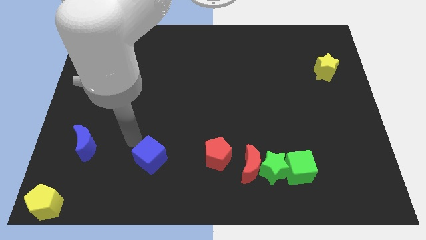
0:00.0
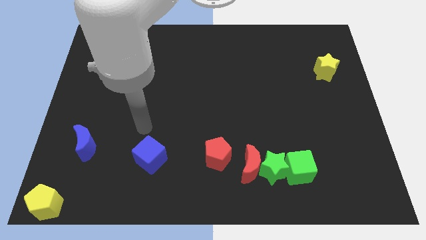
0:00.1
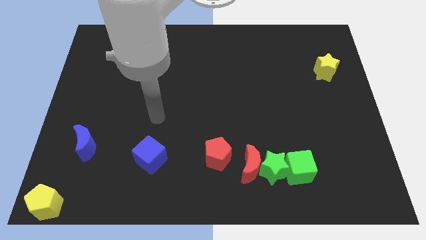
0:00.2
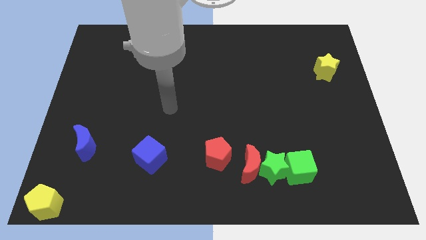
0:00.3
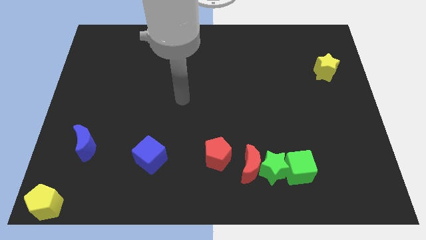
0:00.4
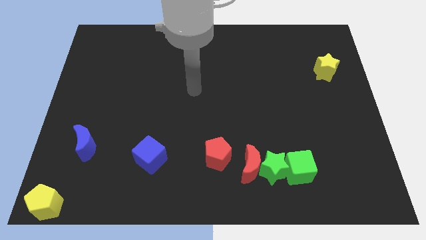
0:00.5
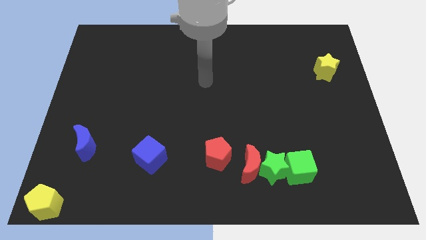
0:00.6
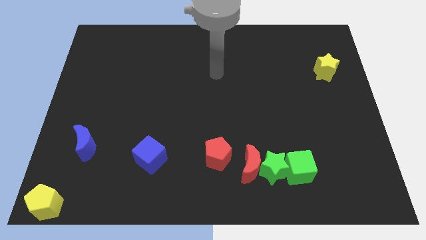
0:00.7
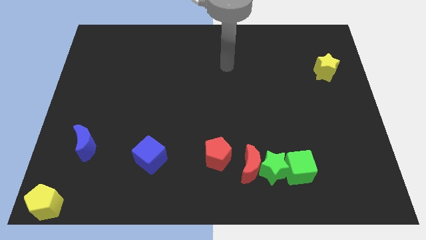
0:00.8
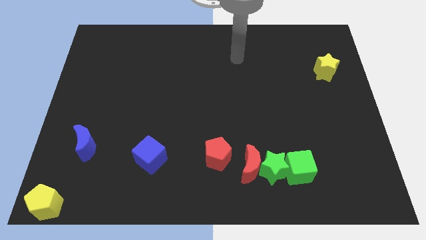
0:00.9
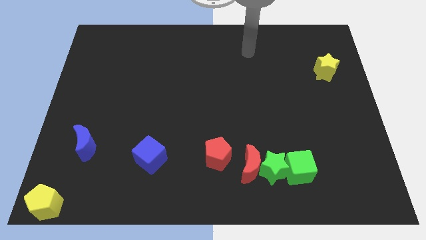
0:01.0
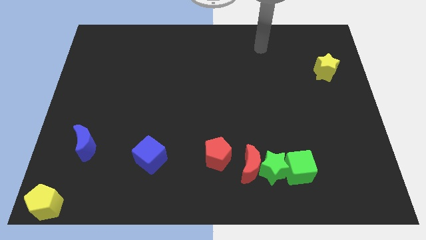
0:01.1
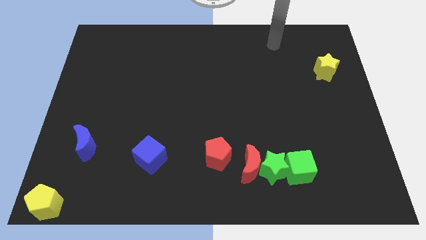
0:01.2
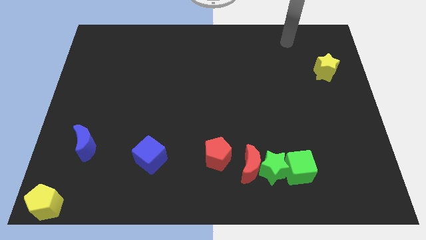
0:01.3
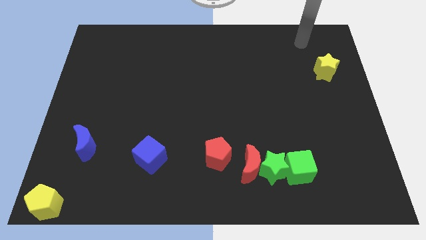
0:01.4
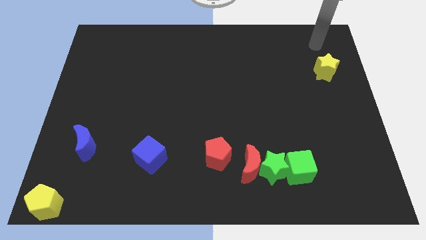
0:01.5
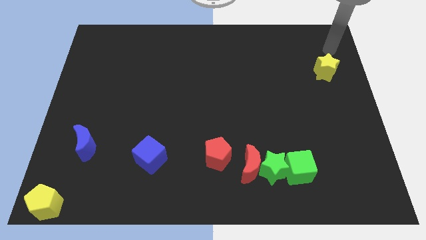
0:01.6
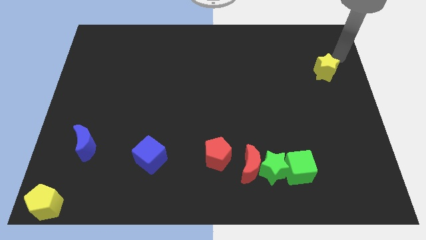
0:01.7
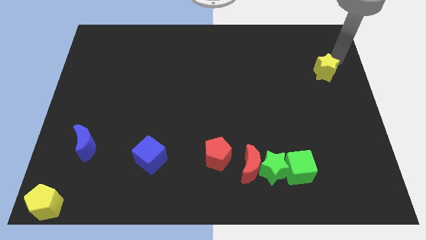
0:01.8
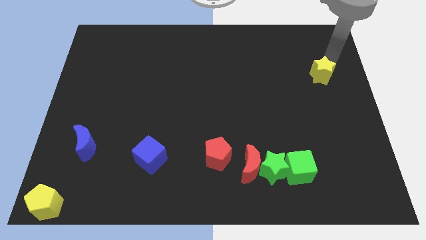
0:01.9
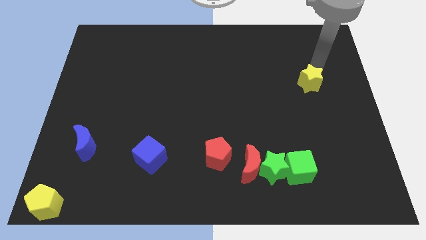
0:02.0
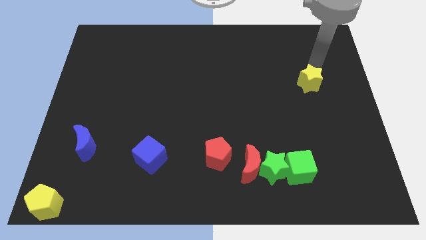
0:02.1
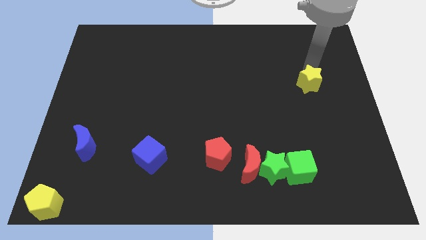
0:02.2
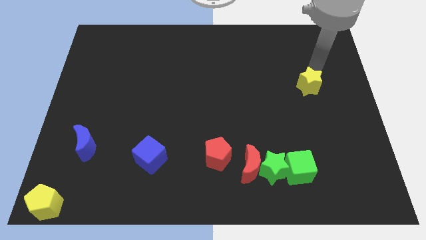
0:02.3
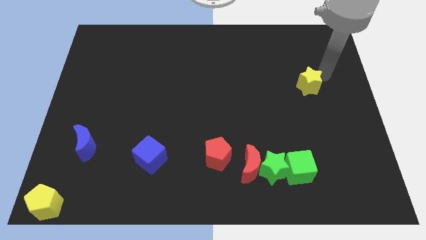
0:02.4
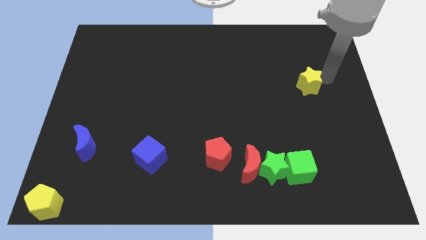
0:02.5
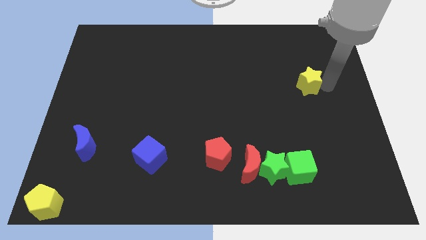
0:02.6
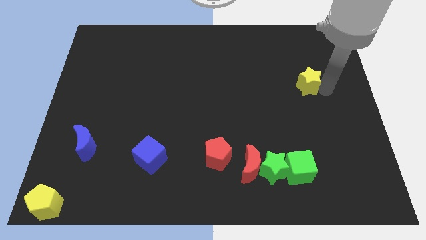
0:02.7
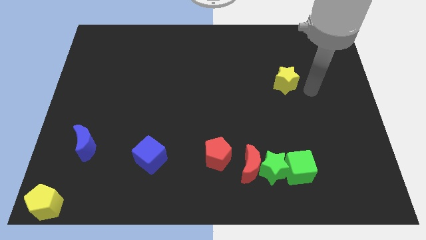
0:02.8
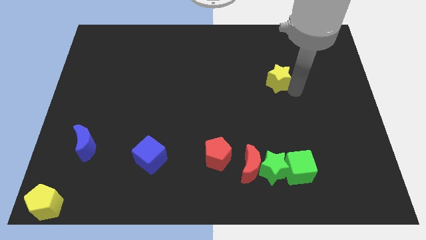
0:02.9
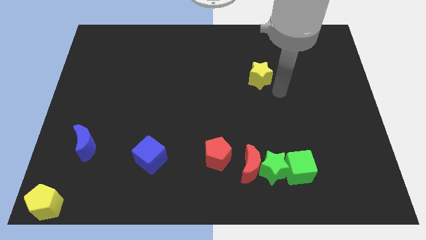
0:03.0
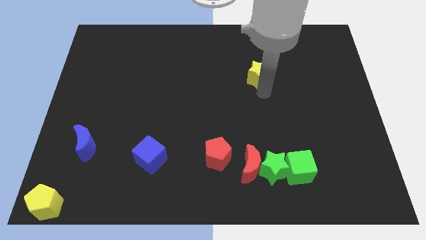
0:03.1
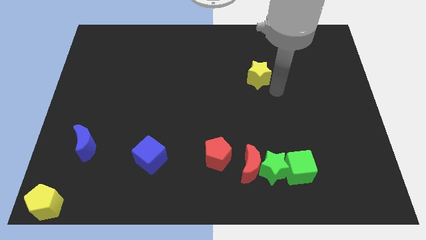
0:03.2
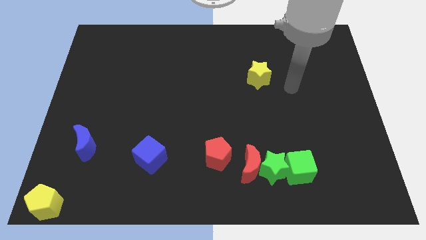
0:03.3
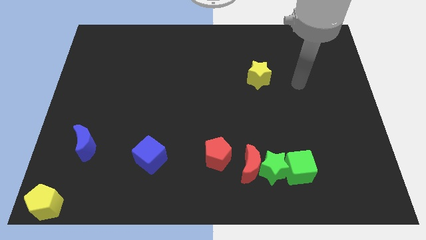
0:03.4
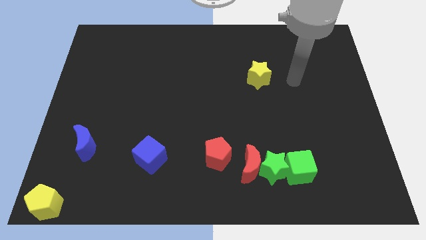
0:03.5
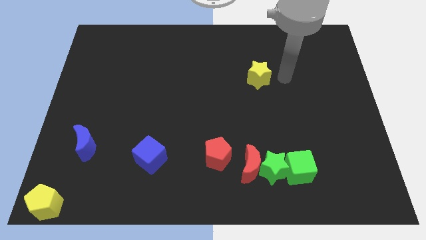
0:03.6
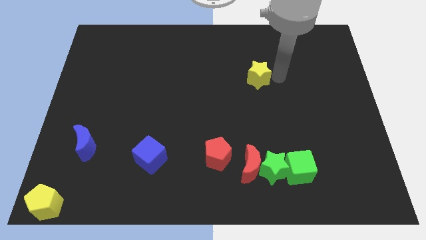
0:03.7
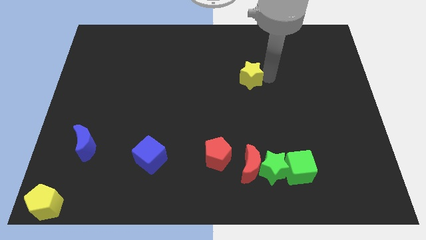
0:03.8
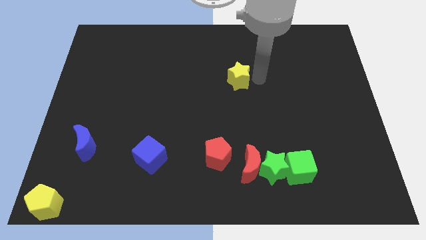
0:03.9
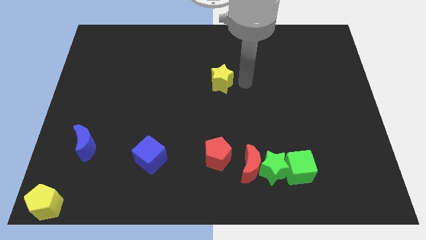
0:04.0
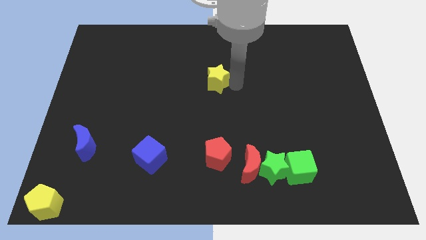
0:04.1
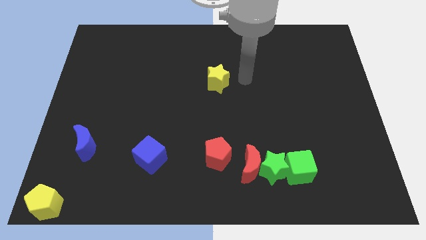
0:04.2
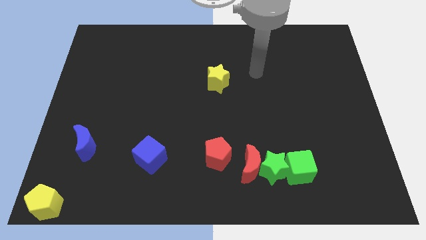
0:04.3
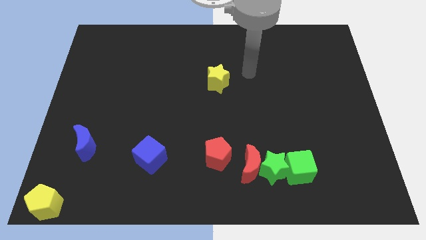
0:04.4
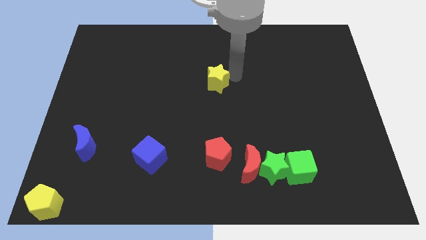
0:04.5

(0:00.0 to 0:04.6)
place the yellow star above the red pentagon

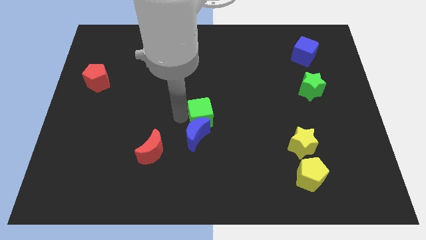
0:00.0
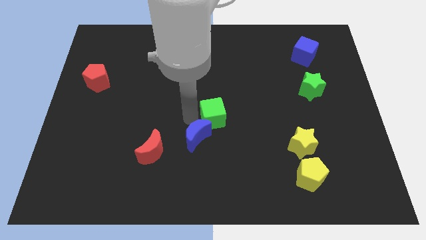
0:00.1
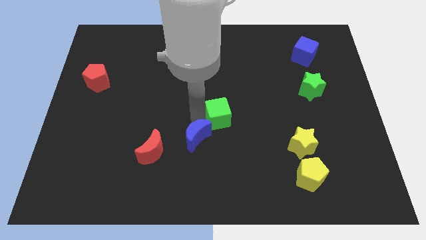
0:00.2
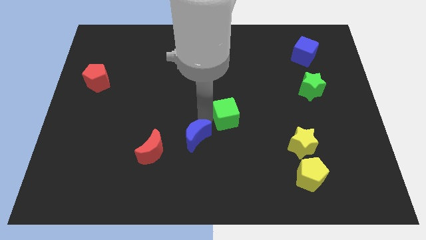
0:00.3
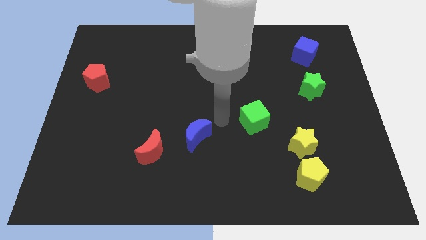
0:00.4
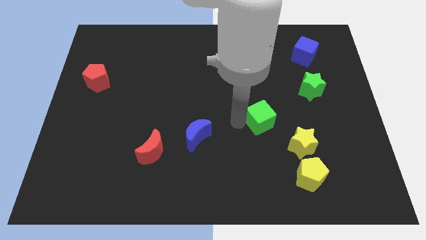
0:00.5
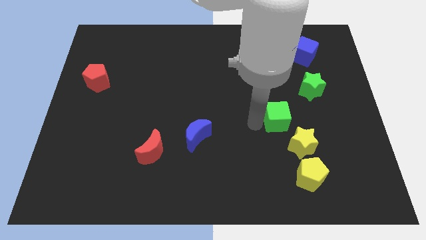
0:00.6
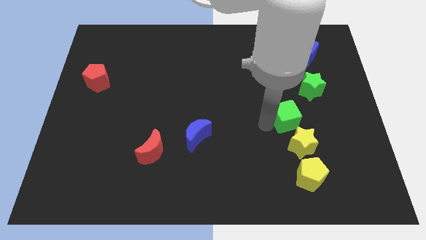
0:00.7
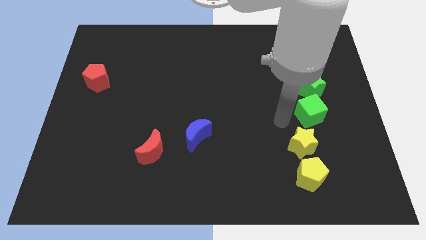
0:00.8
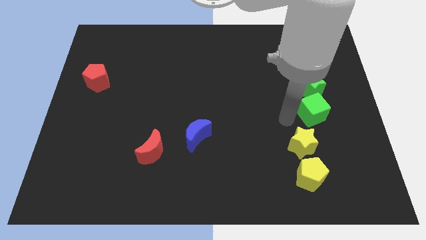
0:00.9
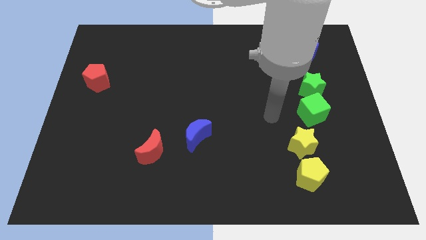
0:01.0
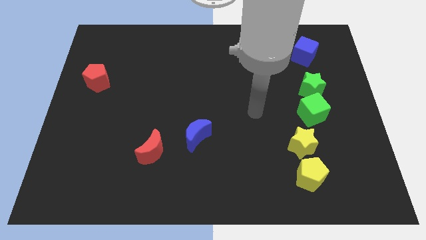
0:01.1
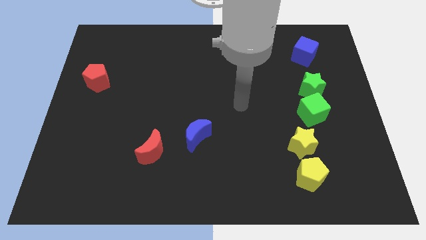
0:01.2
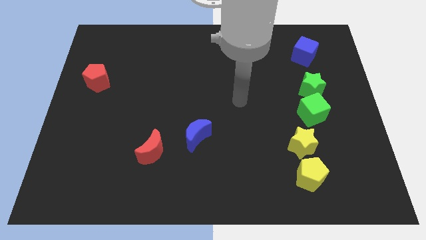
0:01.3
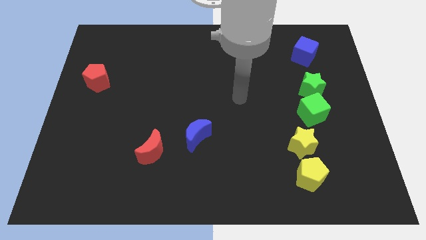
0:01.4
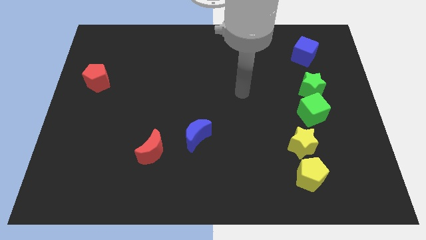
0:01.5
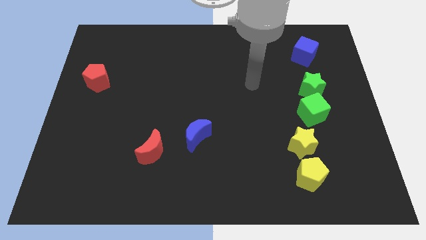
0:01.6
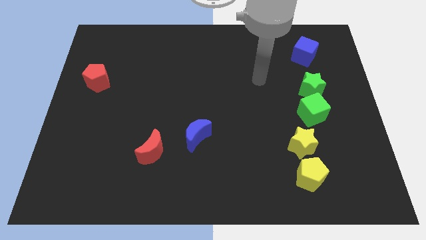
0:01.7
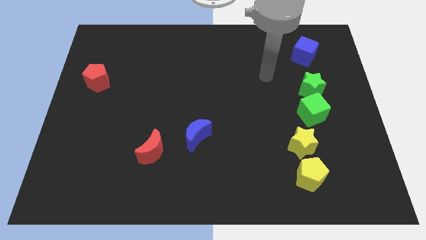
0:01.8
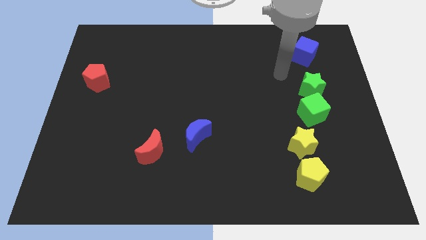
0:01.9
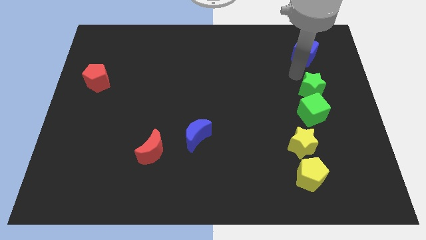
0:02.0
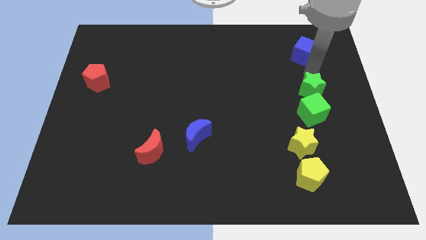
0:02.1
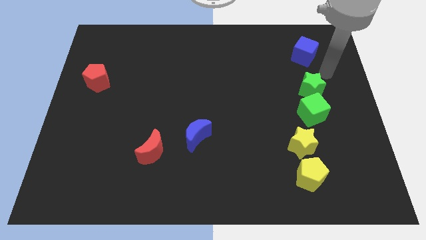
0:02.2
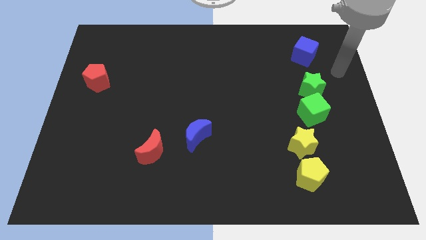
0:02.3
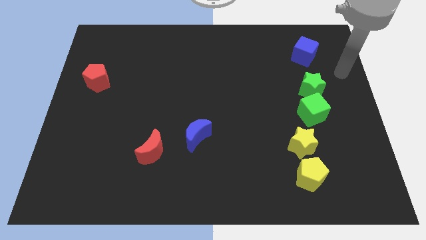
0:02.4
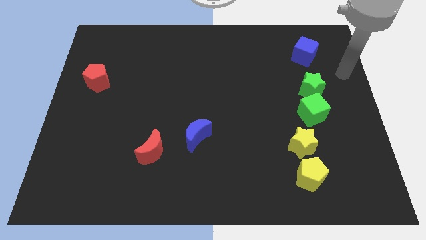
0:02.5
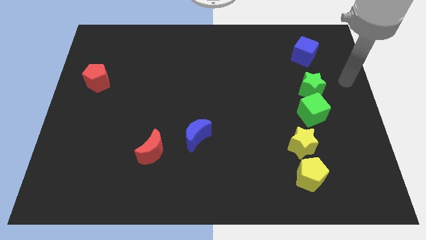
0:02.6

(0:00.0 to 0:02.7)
place the green cube above the yellow star

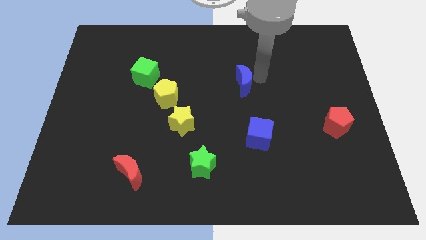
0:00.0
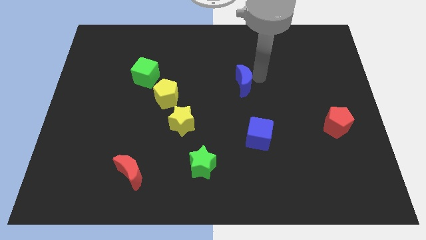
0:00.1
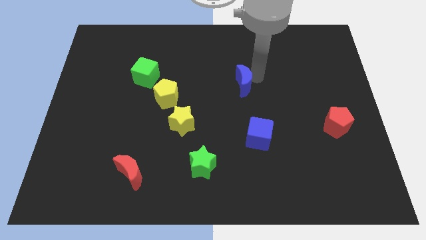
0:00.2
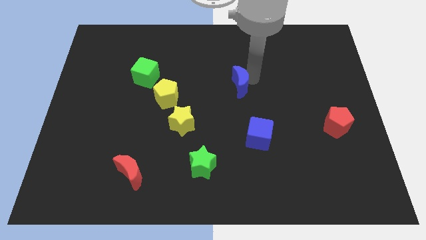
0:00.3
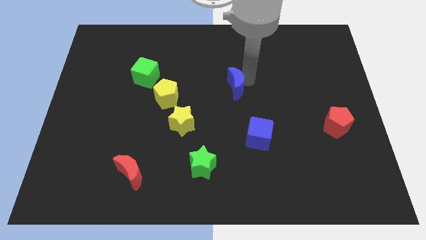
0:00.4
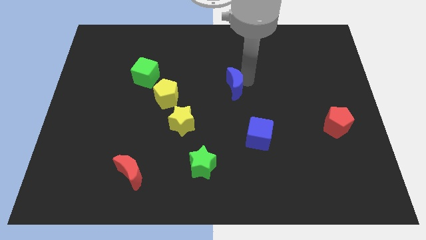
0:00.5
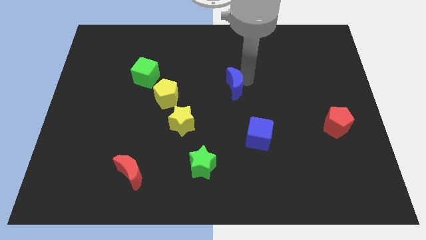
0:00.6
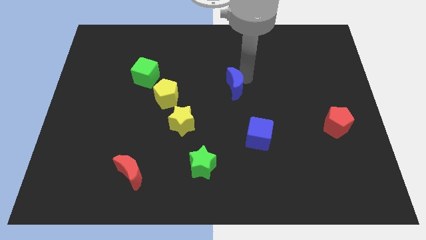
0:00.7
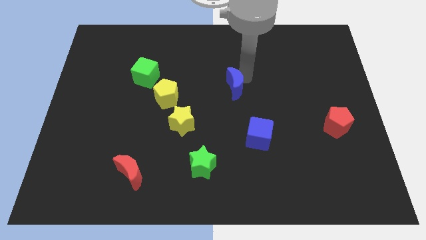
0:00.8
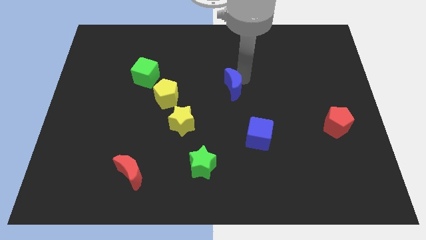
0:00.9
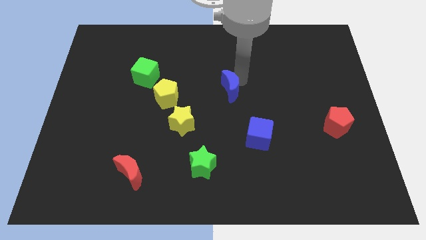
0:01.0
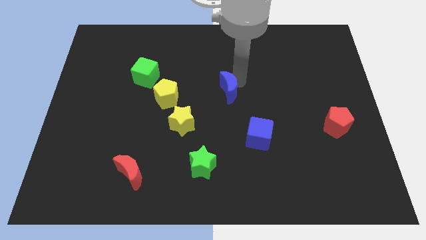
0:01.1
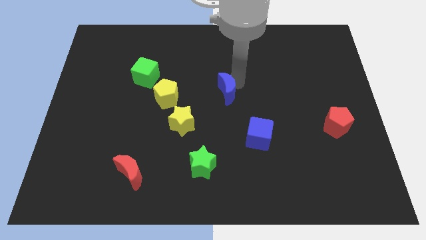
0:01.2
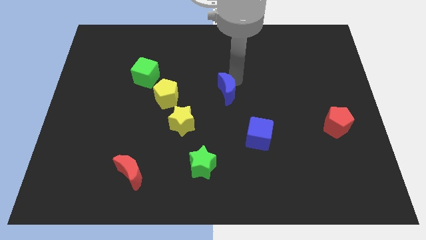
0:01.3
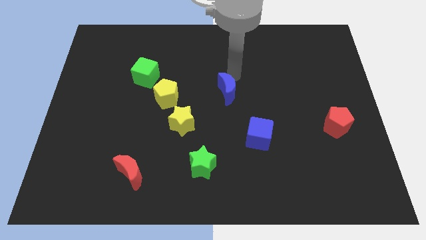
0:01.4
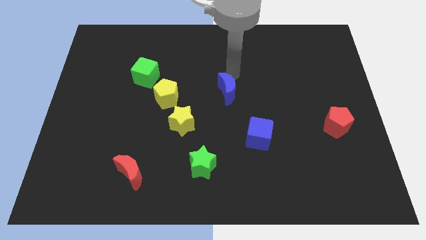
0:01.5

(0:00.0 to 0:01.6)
move the blue moon towards the center of the board

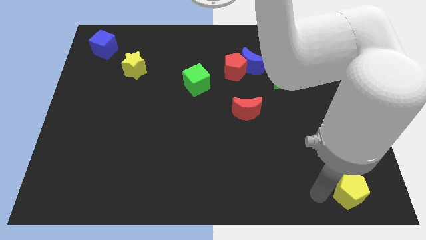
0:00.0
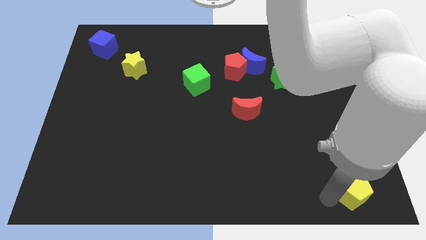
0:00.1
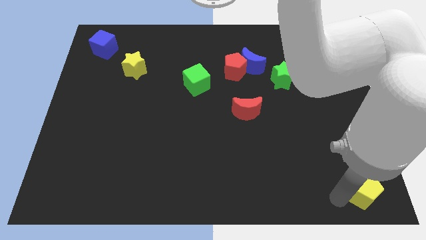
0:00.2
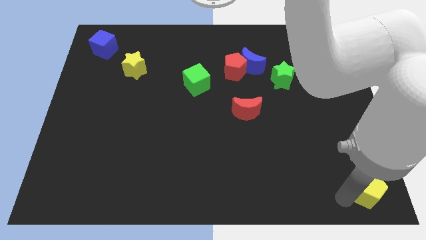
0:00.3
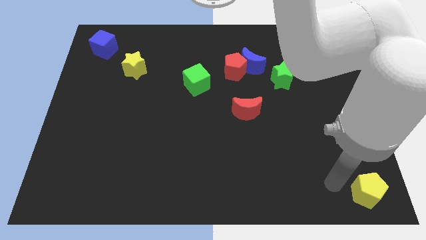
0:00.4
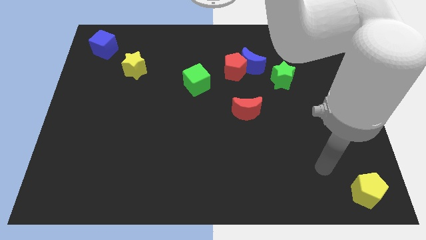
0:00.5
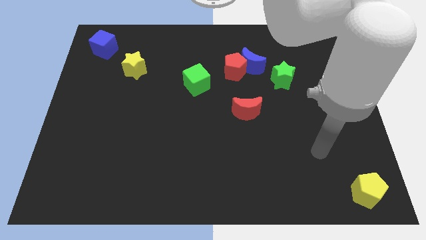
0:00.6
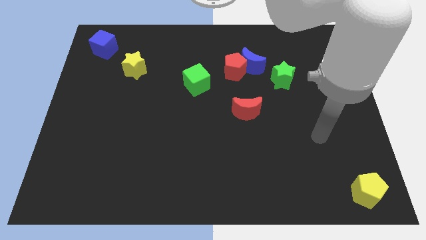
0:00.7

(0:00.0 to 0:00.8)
move the yellow pentagon to the bottom right corner of the board
